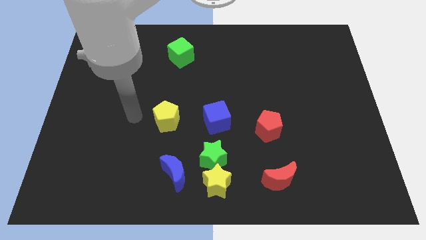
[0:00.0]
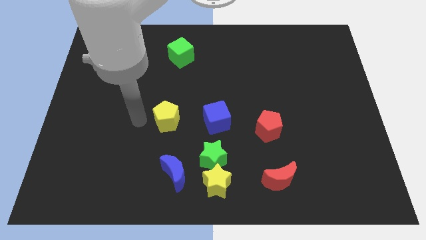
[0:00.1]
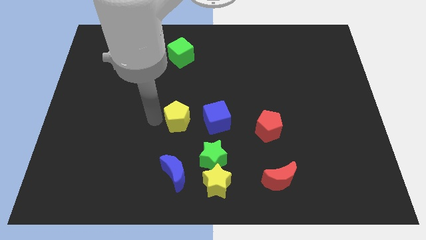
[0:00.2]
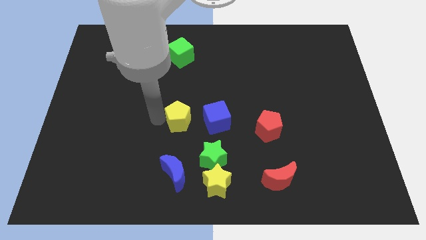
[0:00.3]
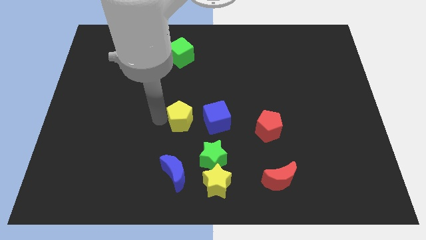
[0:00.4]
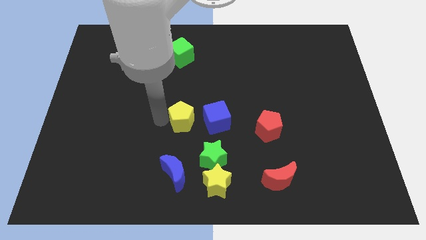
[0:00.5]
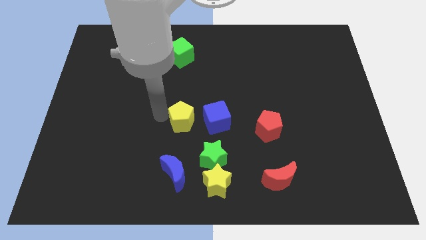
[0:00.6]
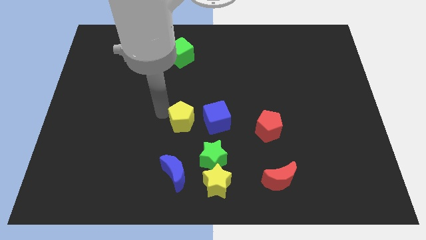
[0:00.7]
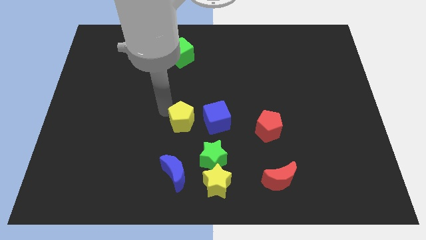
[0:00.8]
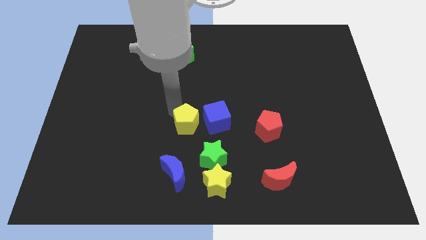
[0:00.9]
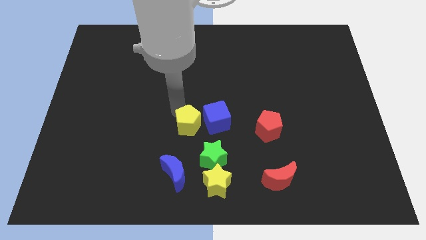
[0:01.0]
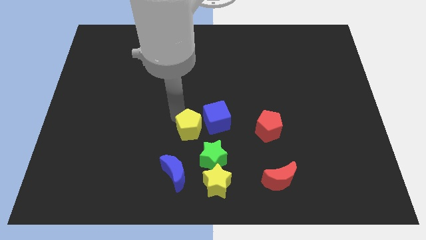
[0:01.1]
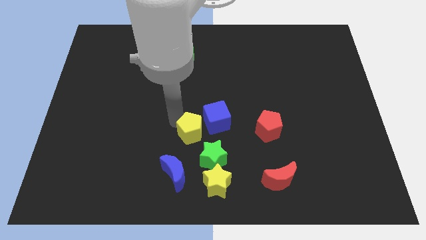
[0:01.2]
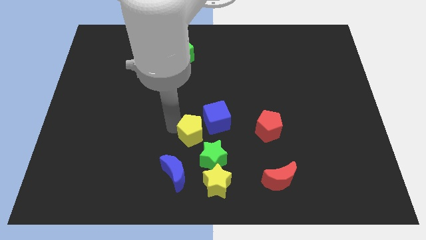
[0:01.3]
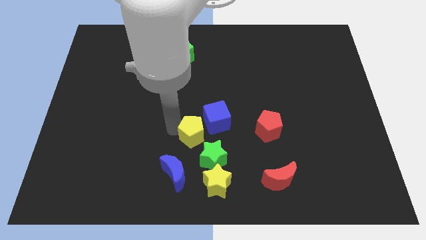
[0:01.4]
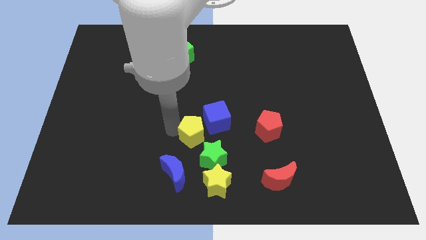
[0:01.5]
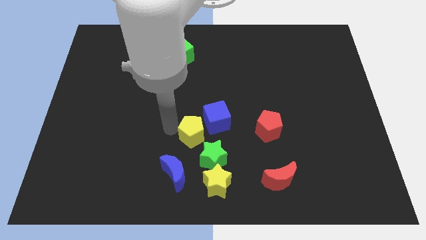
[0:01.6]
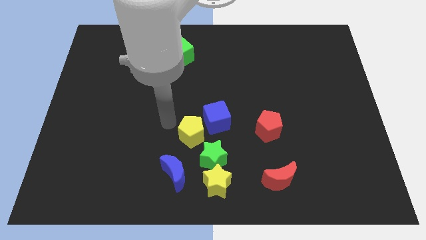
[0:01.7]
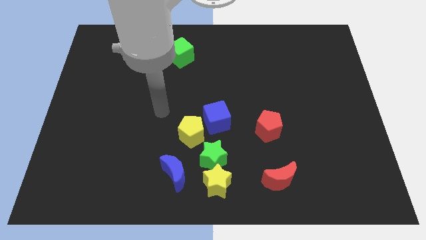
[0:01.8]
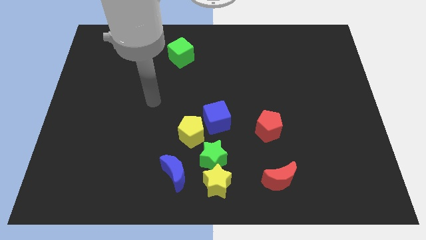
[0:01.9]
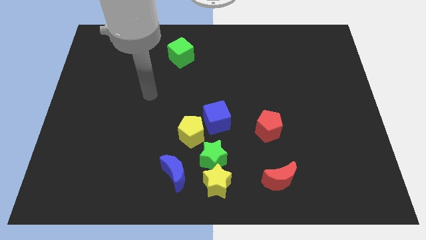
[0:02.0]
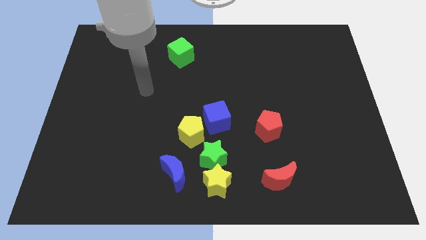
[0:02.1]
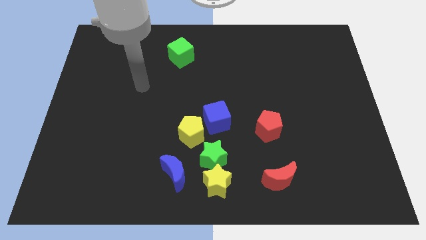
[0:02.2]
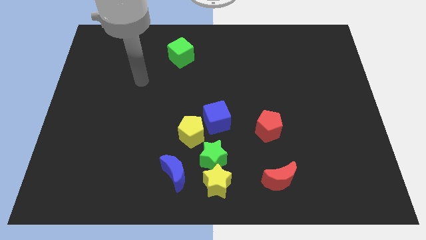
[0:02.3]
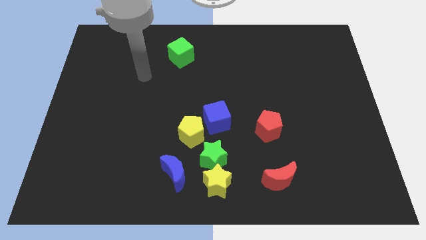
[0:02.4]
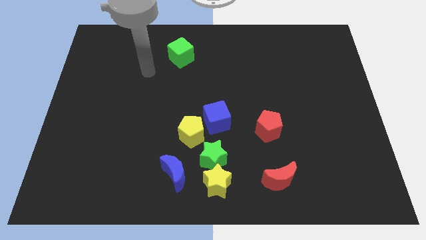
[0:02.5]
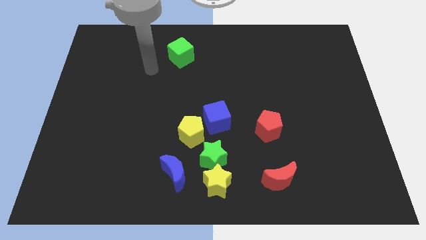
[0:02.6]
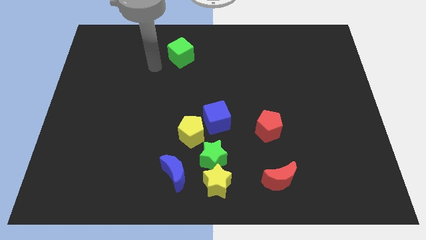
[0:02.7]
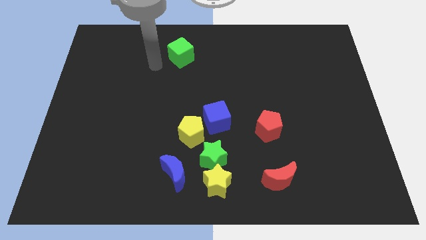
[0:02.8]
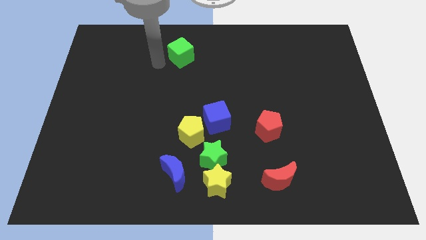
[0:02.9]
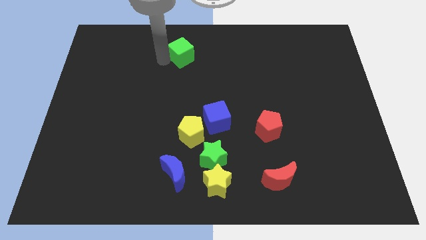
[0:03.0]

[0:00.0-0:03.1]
push the yellow pentagon close to the green star

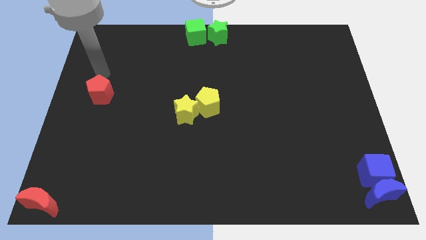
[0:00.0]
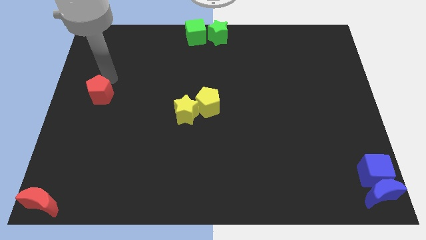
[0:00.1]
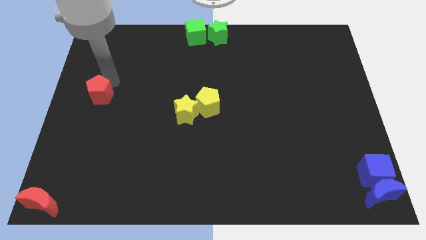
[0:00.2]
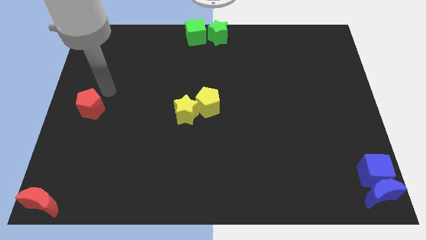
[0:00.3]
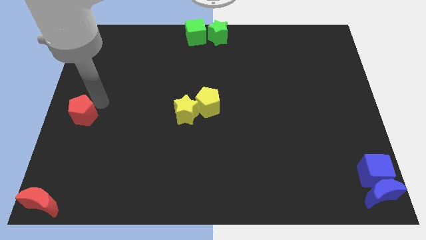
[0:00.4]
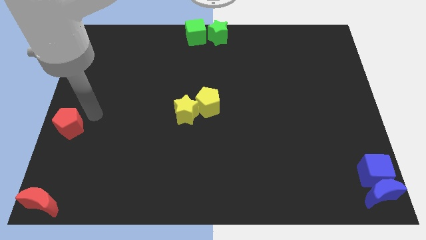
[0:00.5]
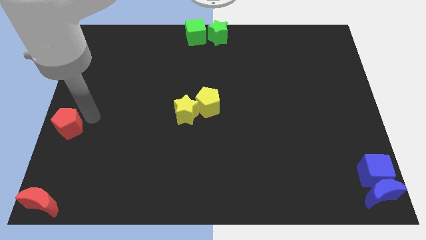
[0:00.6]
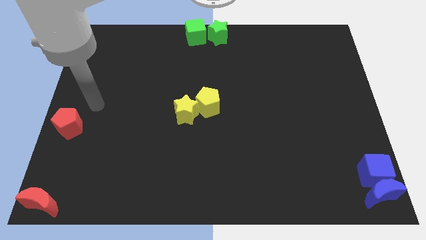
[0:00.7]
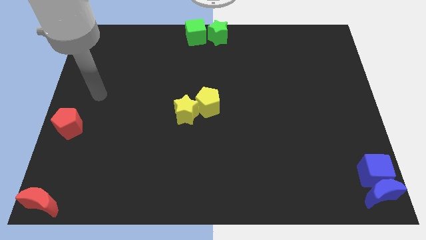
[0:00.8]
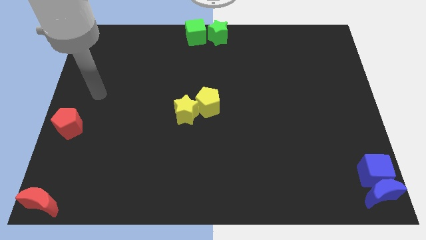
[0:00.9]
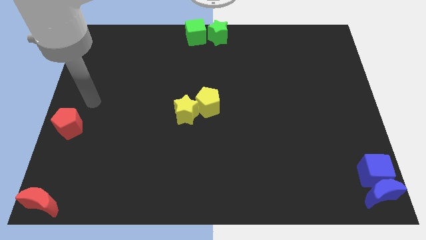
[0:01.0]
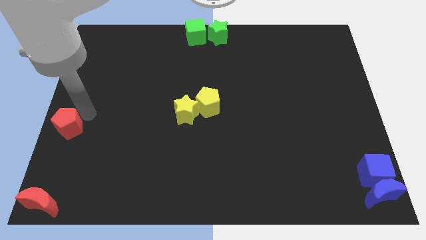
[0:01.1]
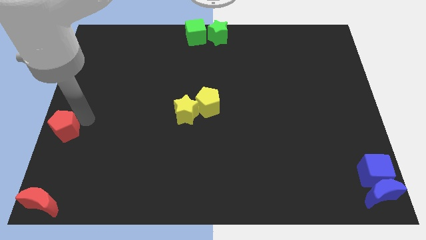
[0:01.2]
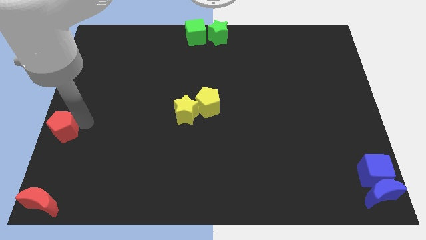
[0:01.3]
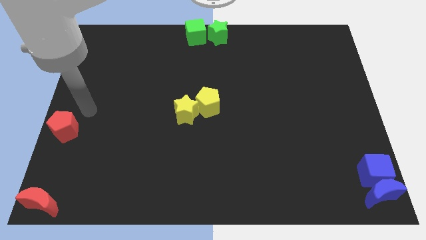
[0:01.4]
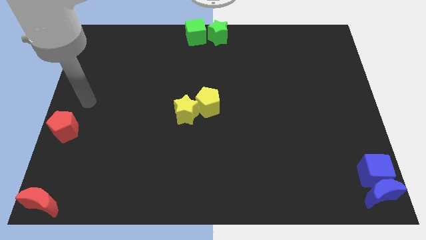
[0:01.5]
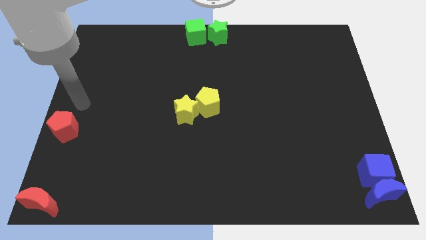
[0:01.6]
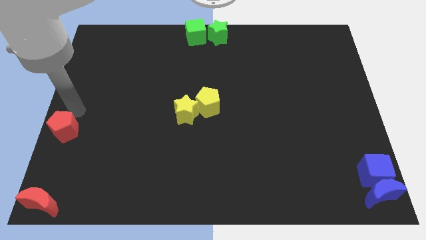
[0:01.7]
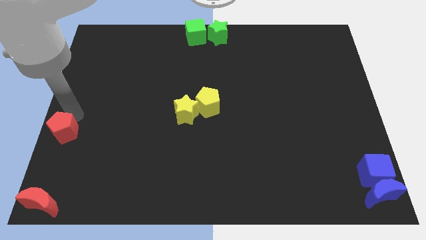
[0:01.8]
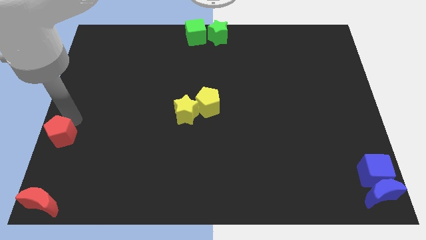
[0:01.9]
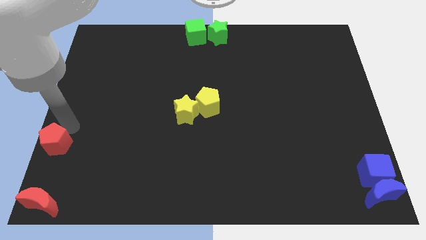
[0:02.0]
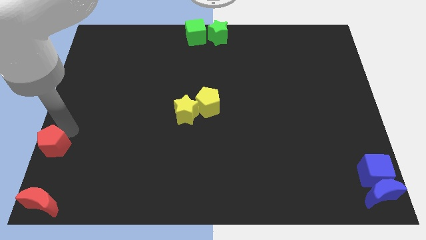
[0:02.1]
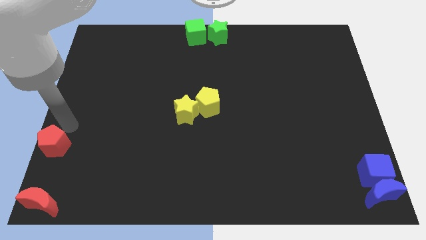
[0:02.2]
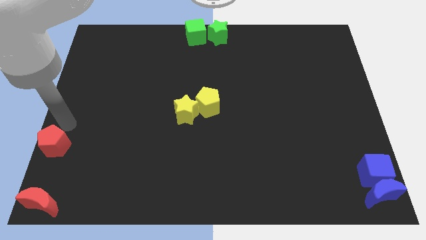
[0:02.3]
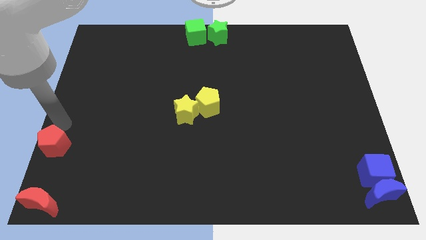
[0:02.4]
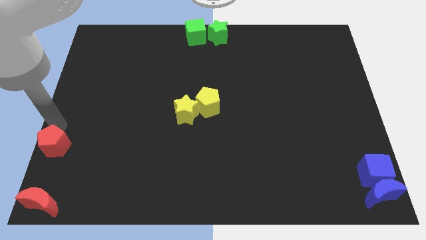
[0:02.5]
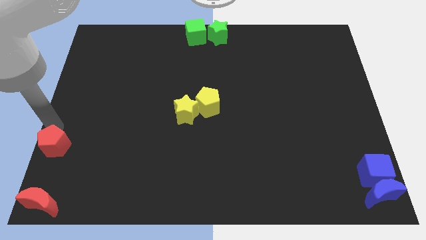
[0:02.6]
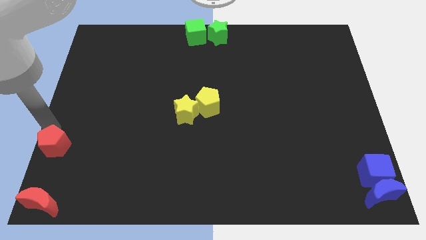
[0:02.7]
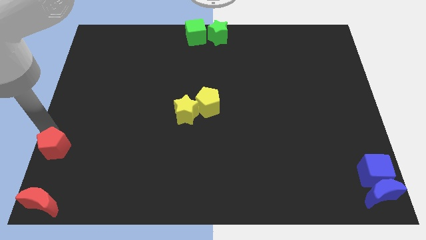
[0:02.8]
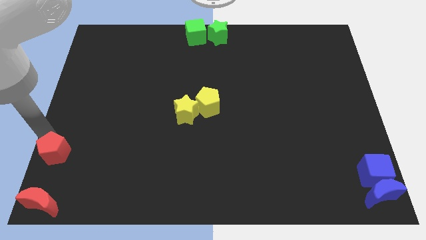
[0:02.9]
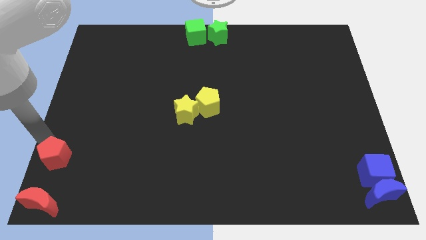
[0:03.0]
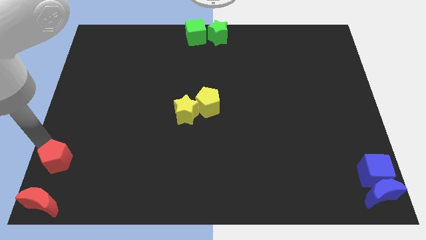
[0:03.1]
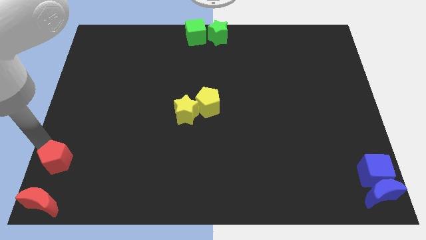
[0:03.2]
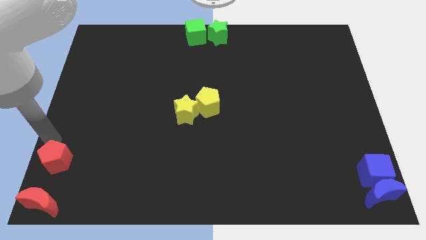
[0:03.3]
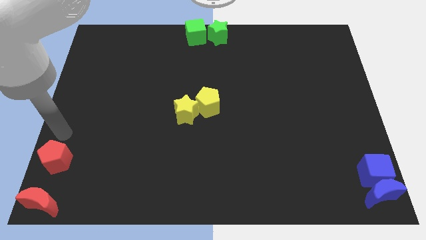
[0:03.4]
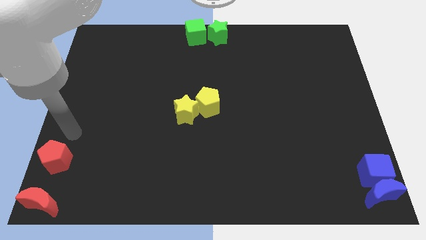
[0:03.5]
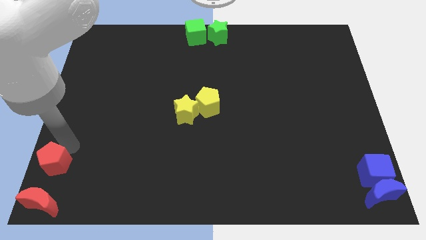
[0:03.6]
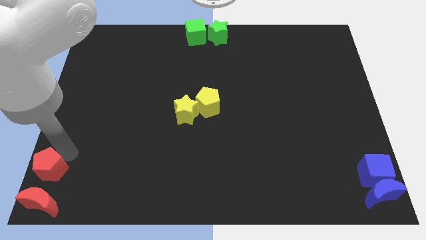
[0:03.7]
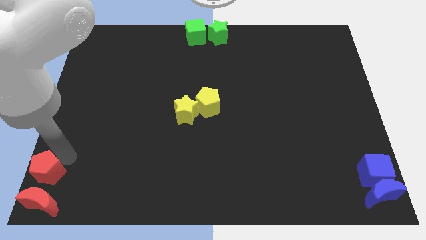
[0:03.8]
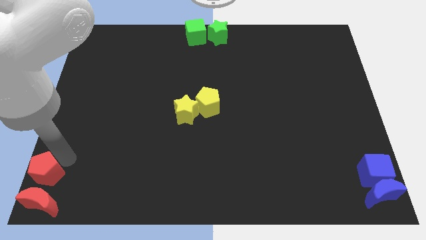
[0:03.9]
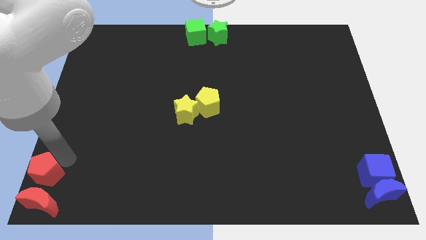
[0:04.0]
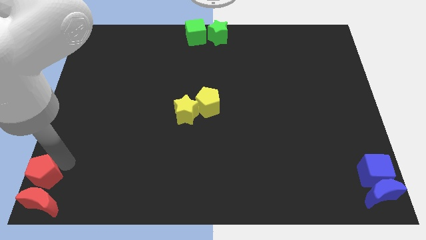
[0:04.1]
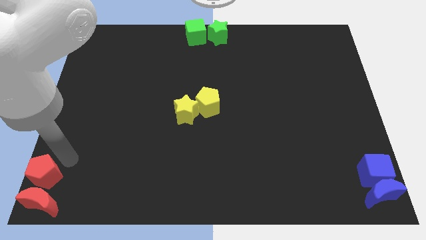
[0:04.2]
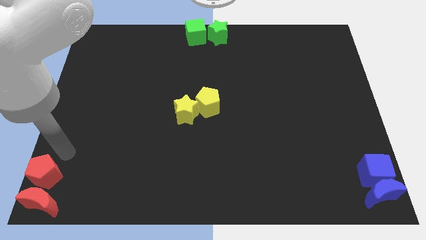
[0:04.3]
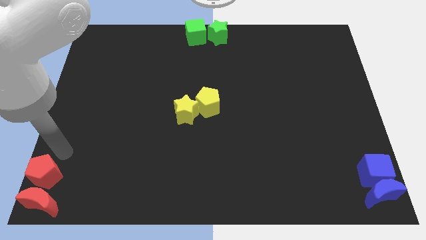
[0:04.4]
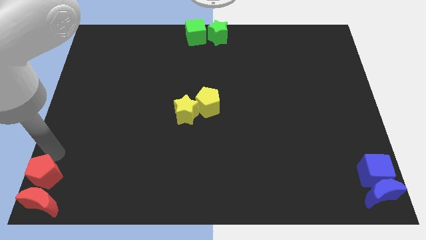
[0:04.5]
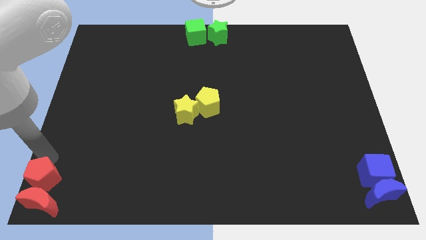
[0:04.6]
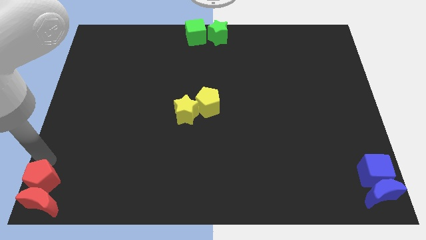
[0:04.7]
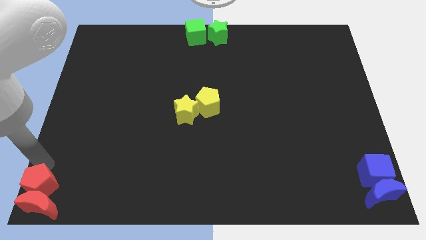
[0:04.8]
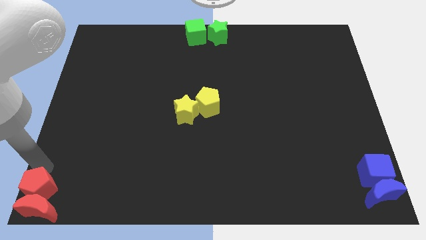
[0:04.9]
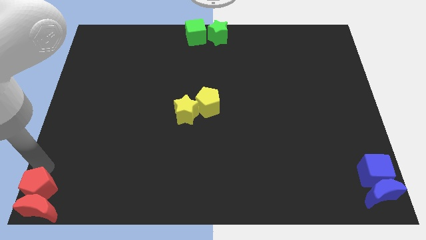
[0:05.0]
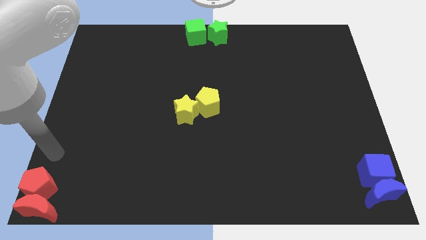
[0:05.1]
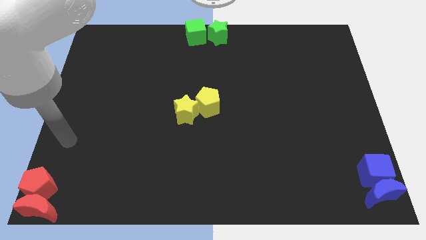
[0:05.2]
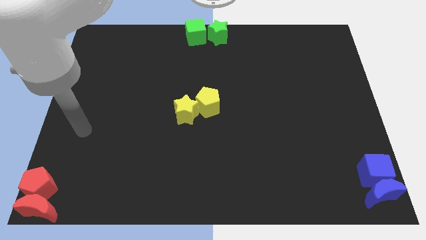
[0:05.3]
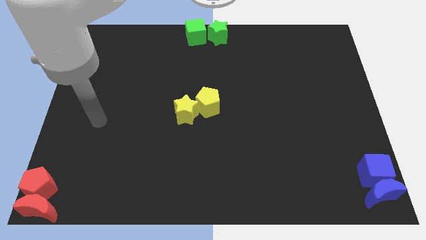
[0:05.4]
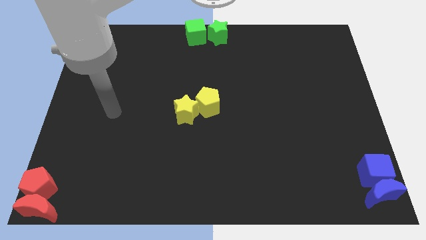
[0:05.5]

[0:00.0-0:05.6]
push the red pentagon into the red moon

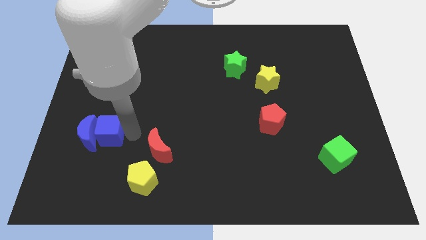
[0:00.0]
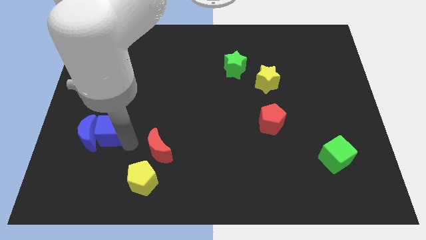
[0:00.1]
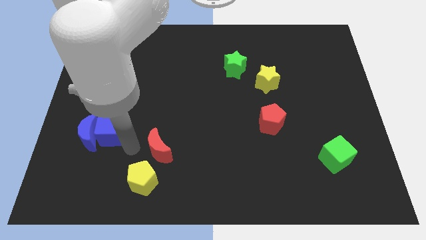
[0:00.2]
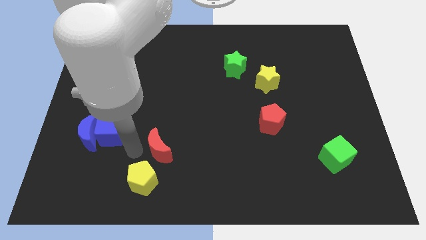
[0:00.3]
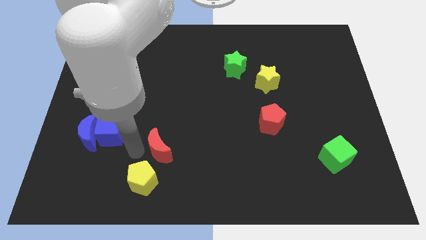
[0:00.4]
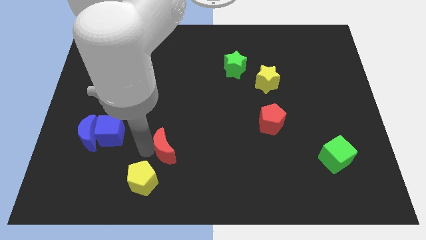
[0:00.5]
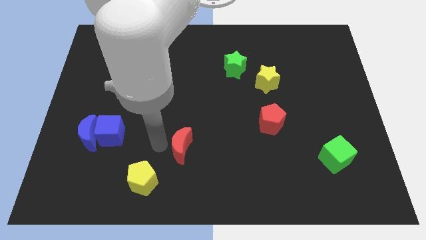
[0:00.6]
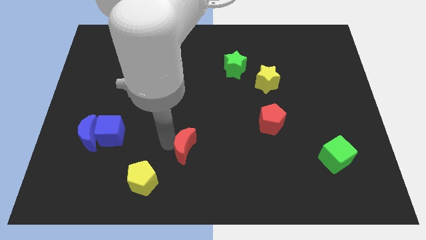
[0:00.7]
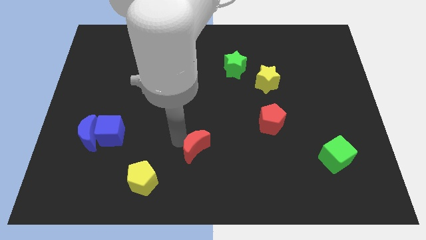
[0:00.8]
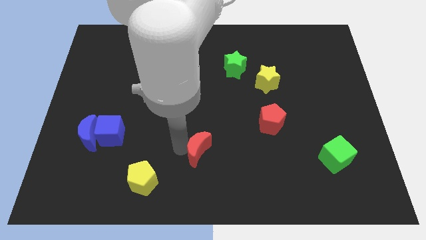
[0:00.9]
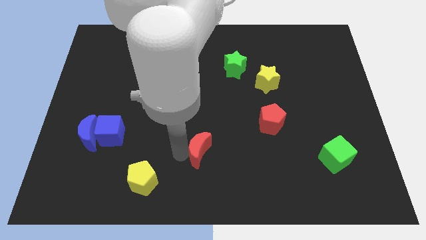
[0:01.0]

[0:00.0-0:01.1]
place the red moon in between the red pentagon and yellow pentagon diagonally
